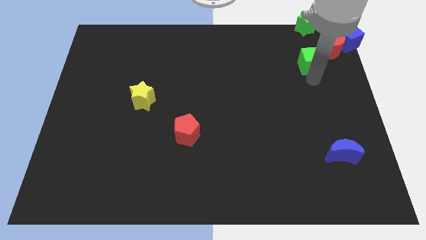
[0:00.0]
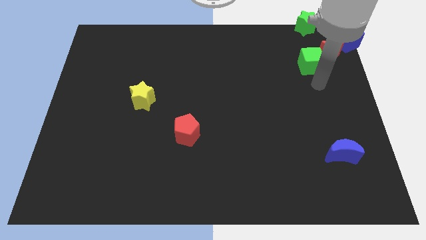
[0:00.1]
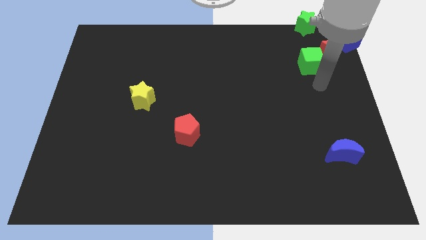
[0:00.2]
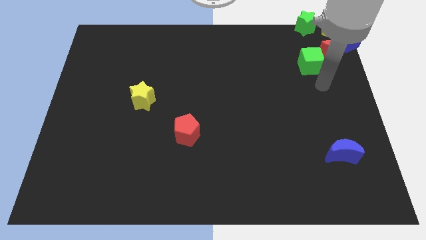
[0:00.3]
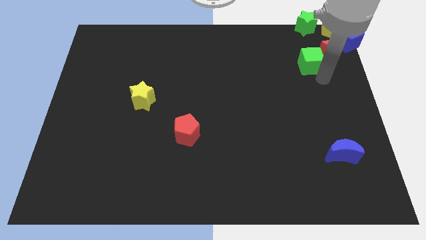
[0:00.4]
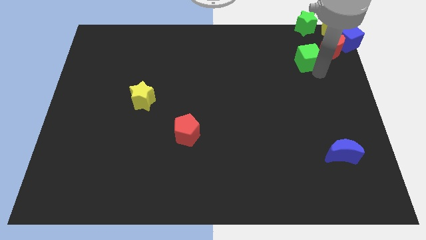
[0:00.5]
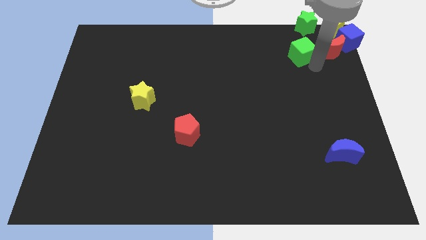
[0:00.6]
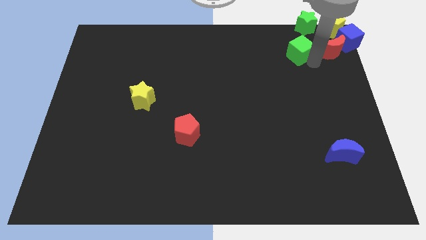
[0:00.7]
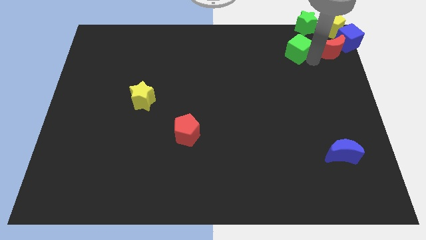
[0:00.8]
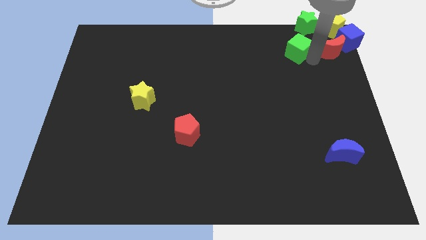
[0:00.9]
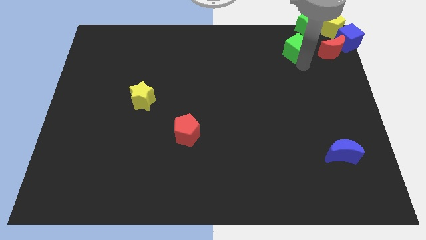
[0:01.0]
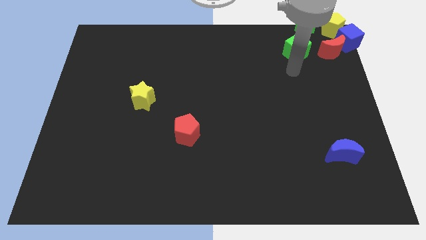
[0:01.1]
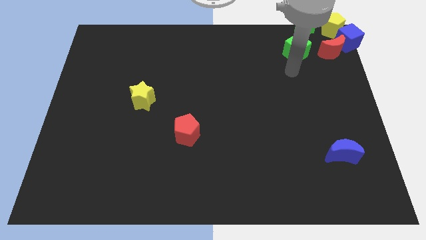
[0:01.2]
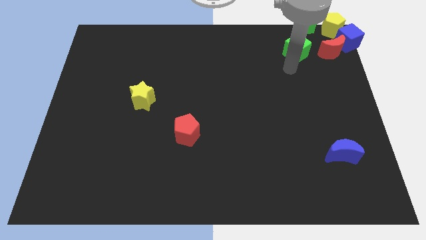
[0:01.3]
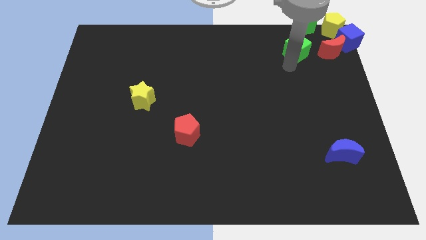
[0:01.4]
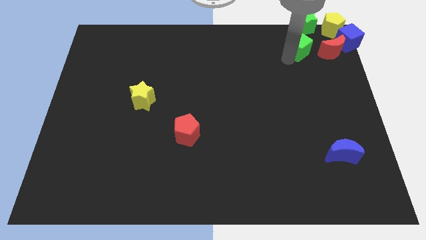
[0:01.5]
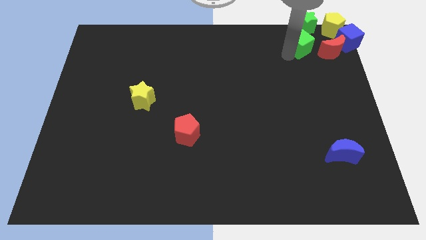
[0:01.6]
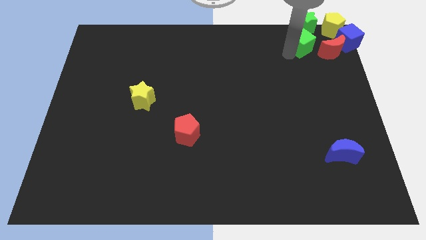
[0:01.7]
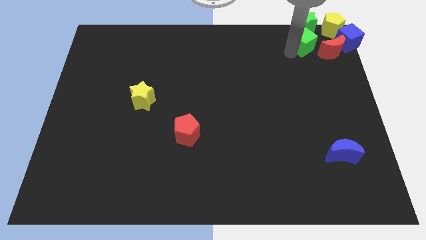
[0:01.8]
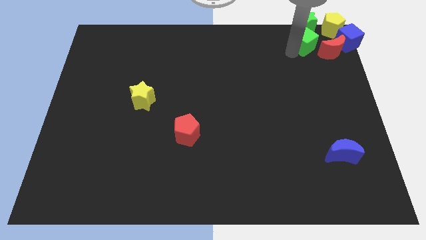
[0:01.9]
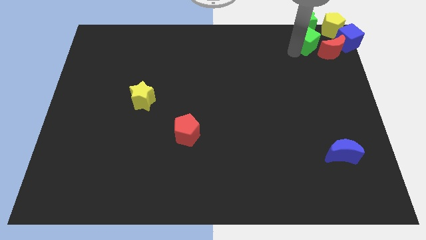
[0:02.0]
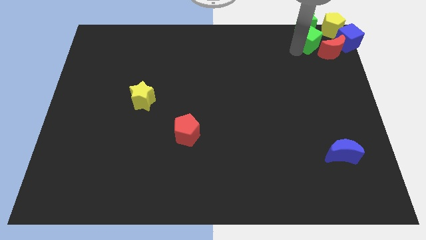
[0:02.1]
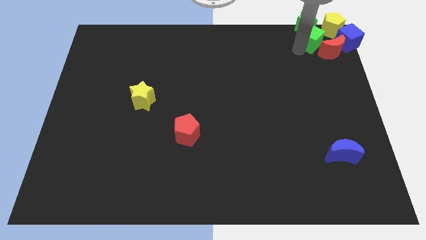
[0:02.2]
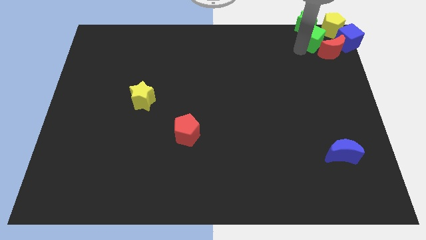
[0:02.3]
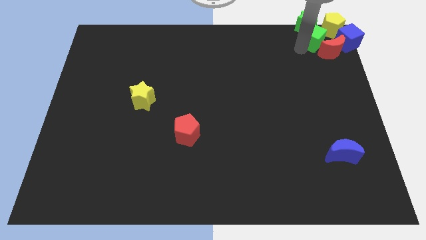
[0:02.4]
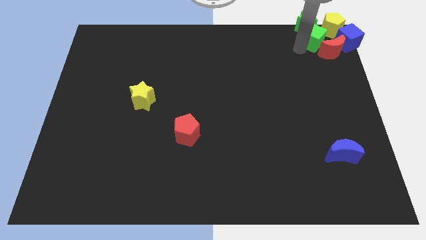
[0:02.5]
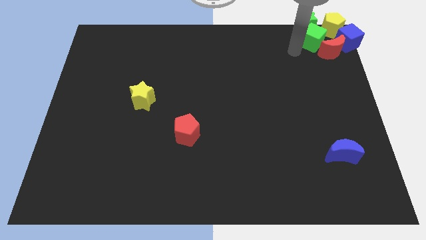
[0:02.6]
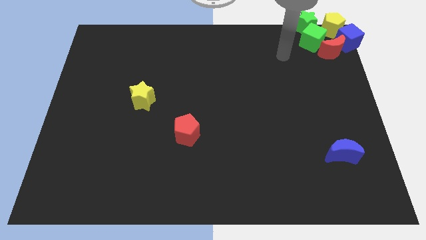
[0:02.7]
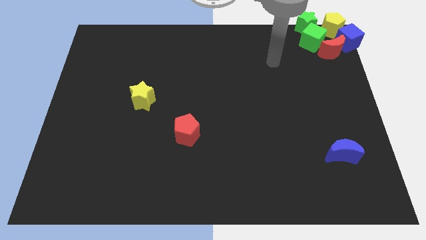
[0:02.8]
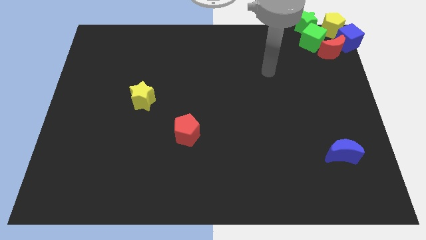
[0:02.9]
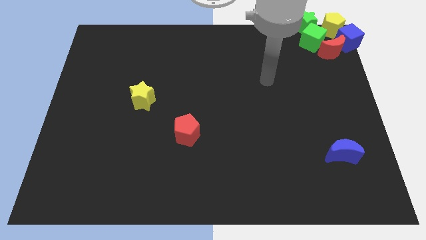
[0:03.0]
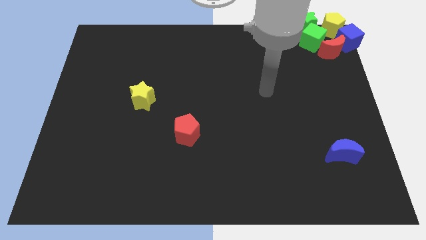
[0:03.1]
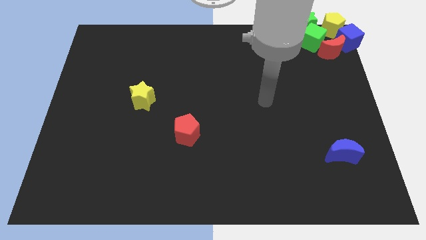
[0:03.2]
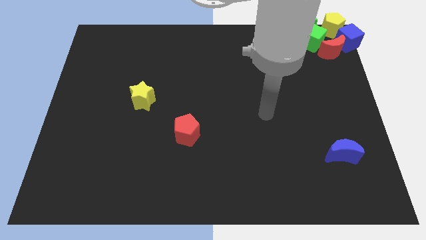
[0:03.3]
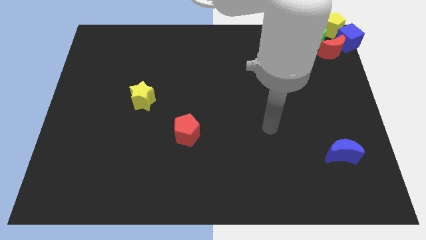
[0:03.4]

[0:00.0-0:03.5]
add the green cube to the group of blocks at the top right corner of the board

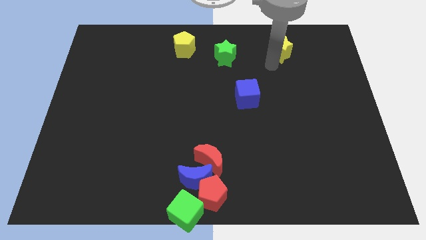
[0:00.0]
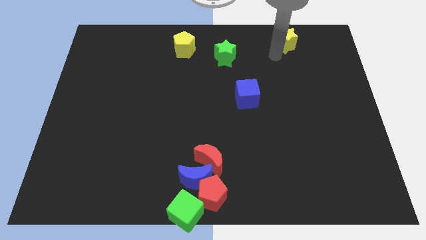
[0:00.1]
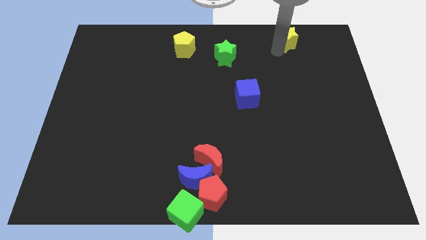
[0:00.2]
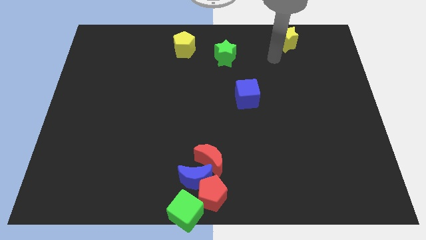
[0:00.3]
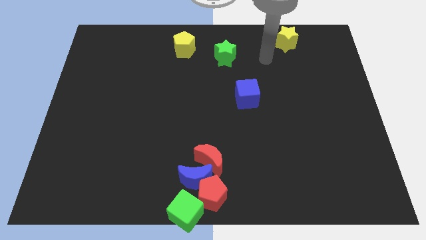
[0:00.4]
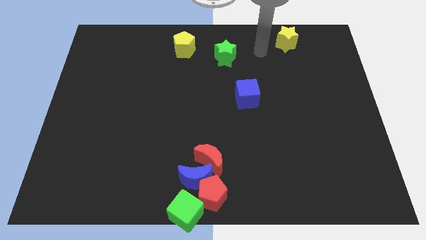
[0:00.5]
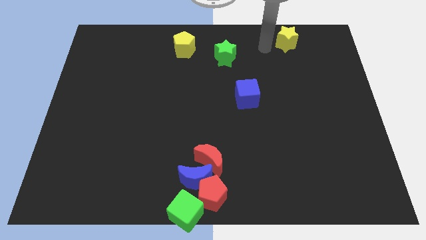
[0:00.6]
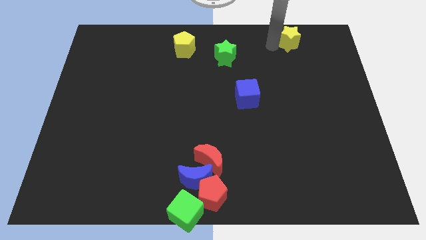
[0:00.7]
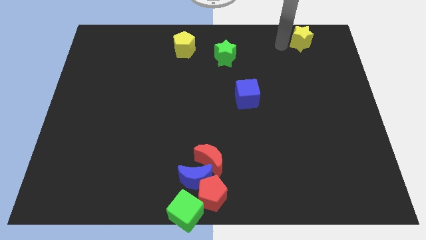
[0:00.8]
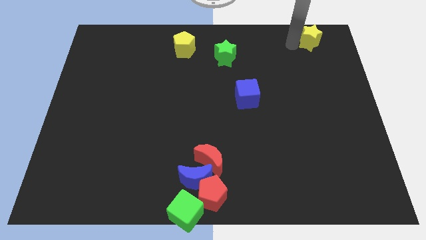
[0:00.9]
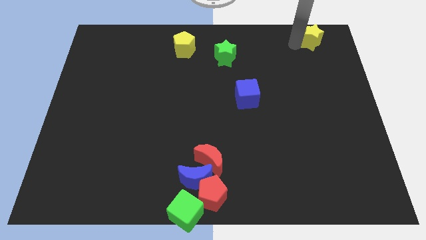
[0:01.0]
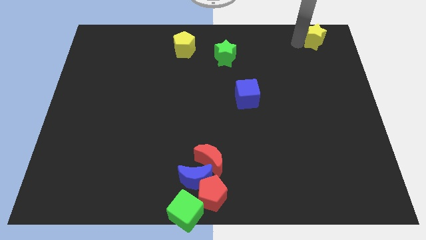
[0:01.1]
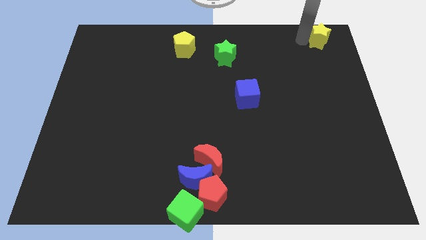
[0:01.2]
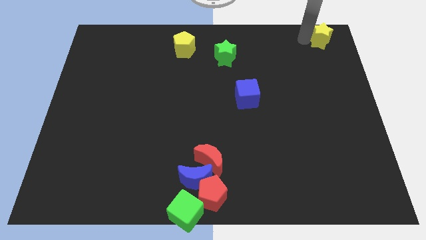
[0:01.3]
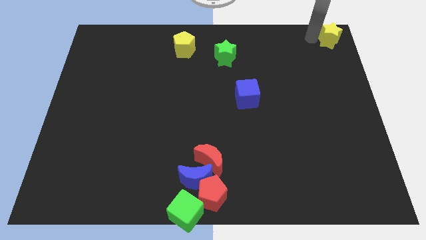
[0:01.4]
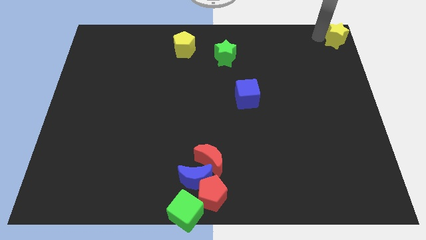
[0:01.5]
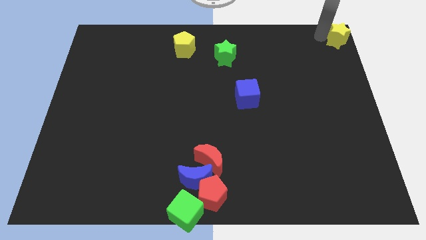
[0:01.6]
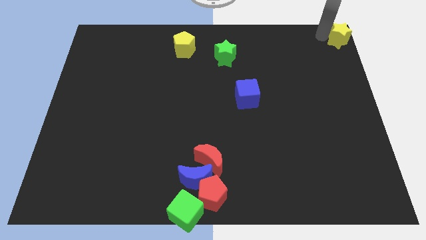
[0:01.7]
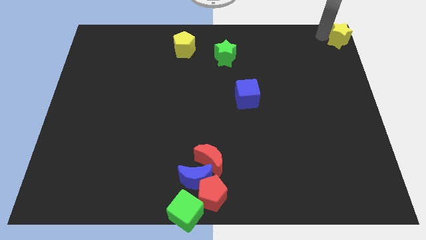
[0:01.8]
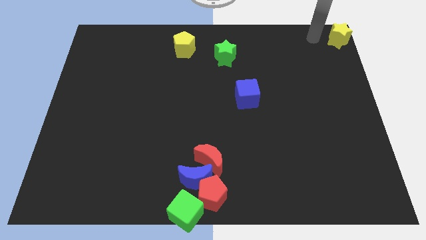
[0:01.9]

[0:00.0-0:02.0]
move the yellow star to the top right of the board

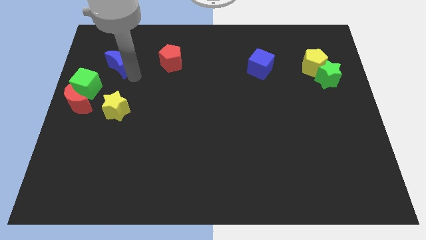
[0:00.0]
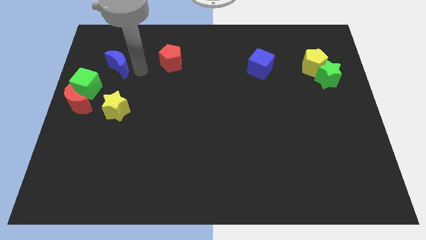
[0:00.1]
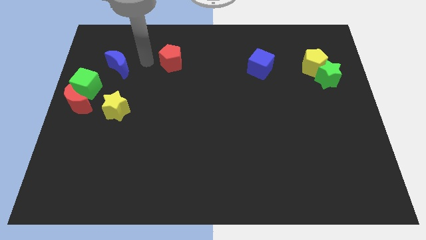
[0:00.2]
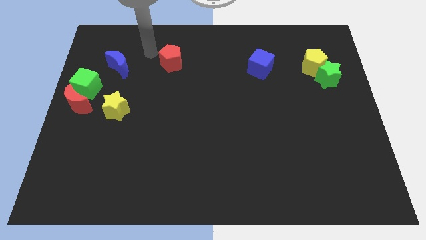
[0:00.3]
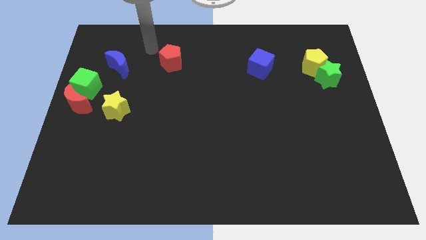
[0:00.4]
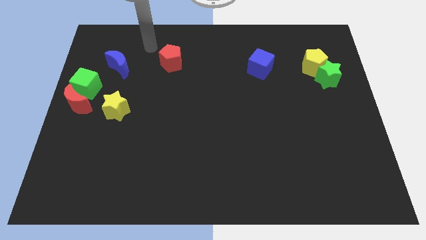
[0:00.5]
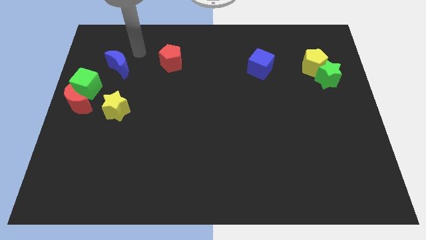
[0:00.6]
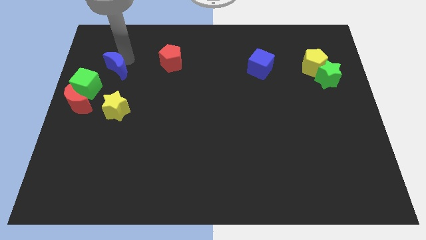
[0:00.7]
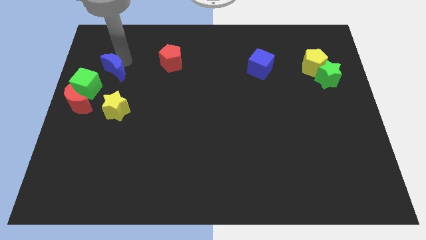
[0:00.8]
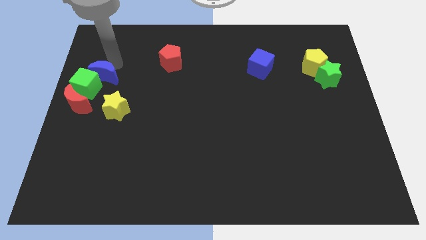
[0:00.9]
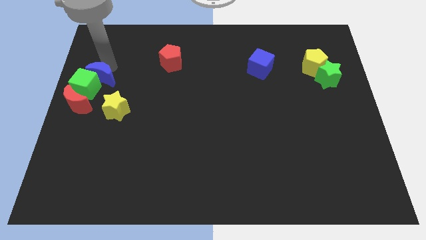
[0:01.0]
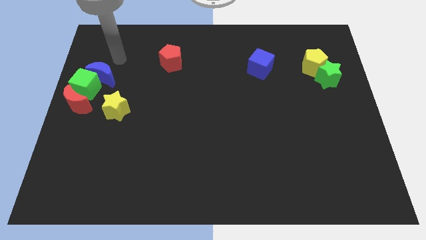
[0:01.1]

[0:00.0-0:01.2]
move the blue crescent into the green cube

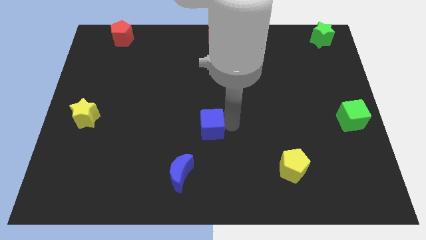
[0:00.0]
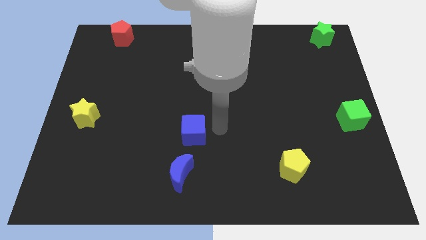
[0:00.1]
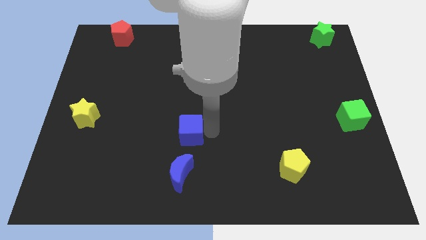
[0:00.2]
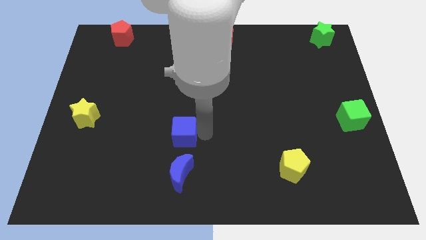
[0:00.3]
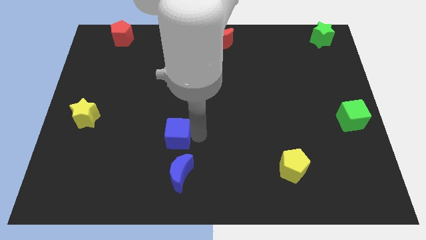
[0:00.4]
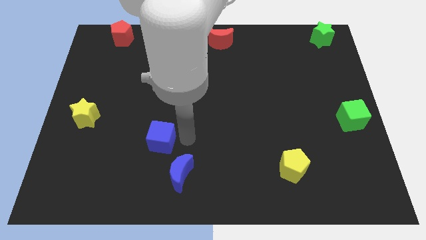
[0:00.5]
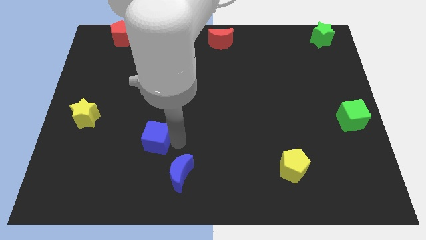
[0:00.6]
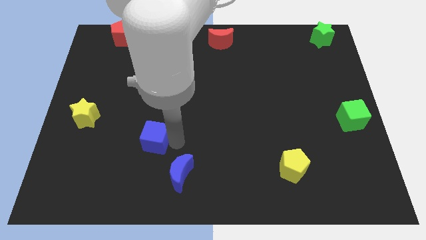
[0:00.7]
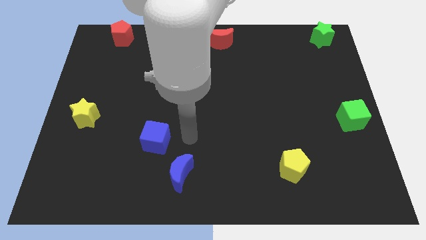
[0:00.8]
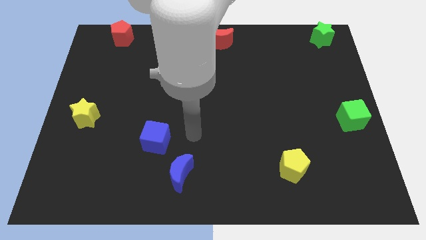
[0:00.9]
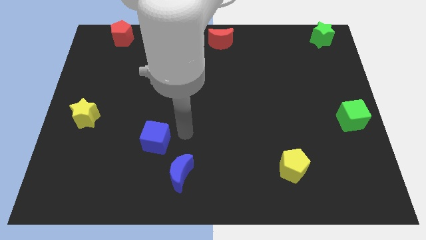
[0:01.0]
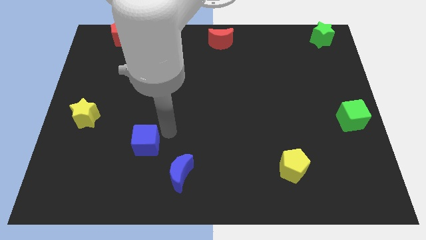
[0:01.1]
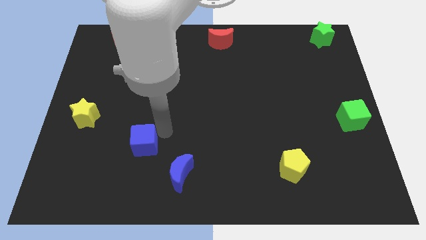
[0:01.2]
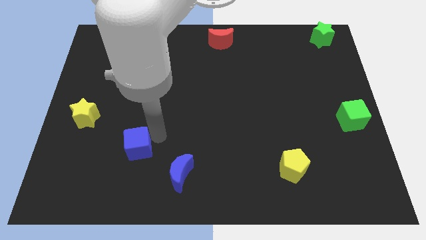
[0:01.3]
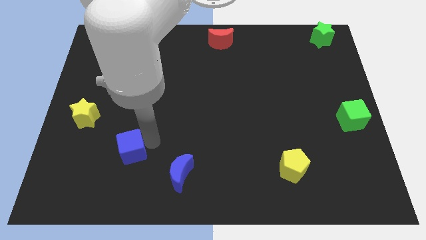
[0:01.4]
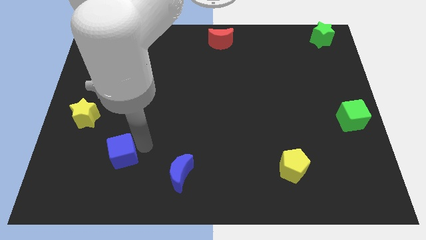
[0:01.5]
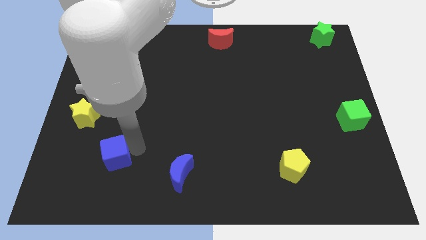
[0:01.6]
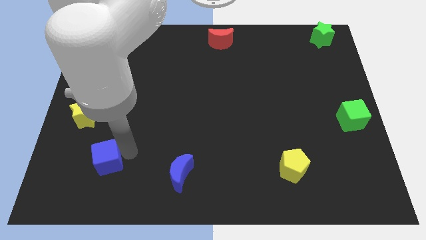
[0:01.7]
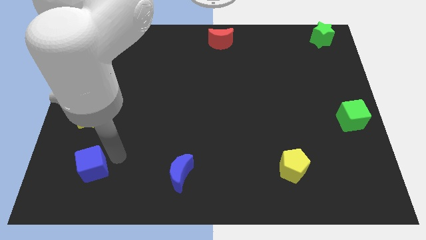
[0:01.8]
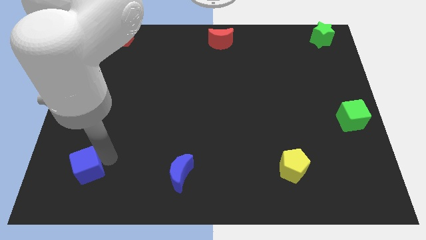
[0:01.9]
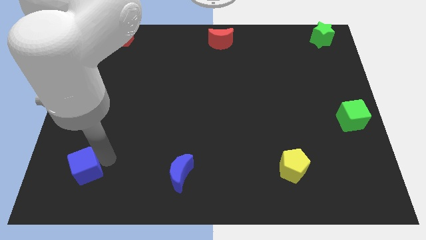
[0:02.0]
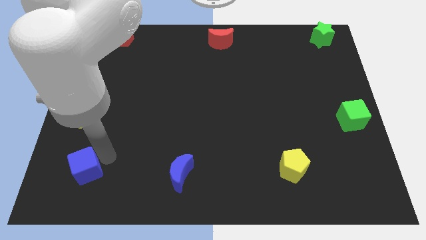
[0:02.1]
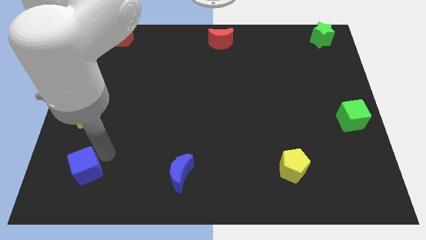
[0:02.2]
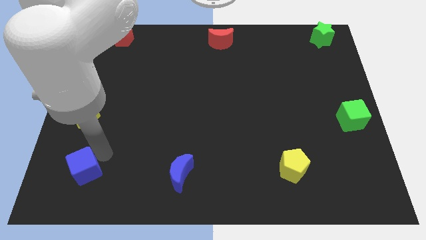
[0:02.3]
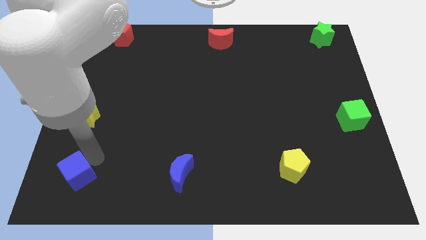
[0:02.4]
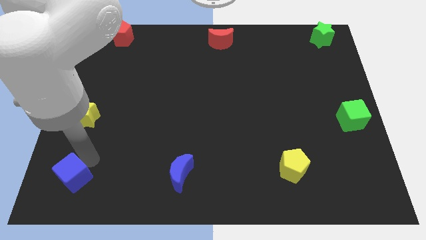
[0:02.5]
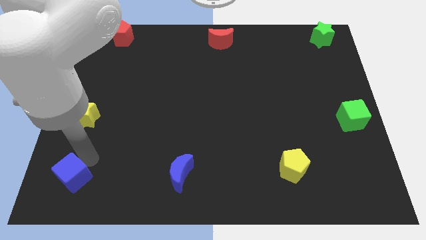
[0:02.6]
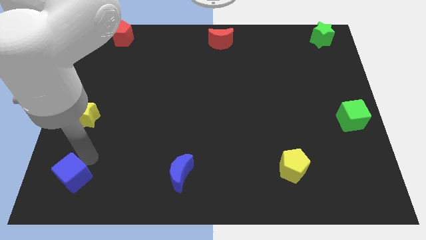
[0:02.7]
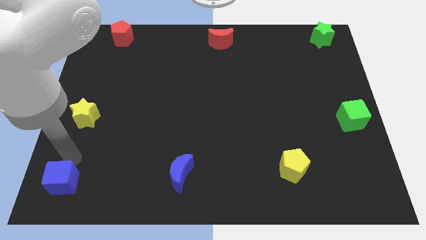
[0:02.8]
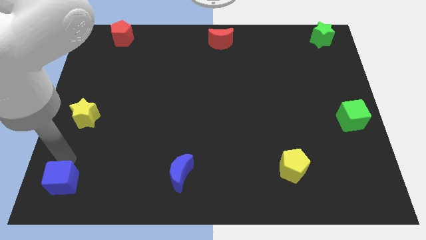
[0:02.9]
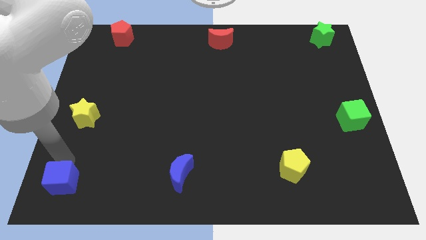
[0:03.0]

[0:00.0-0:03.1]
slide the blue cube slightly towards the bottom left corner of the board
